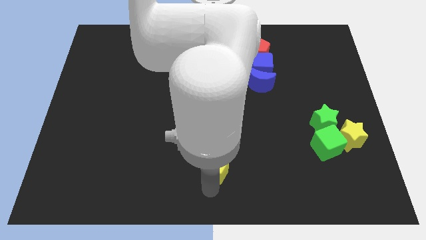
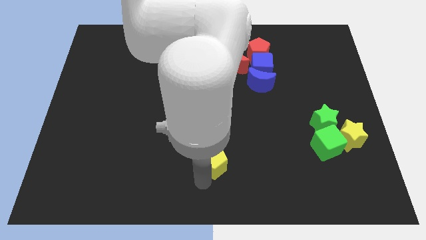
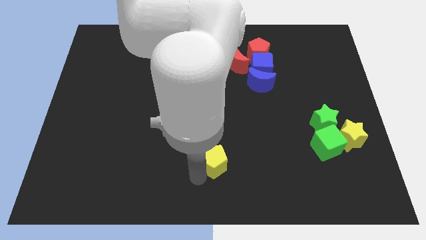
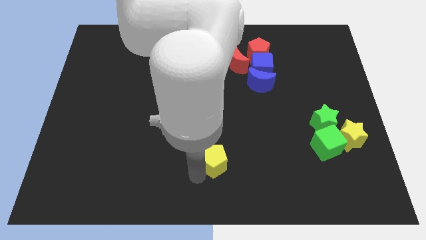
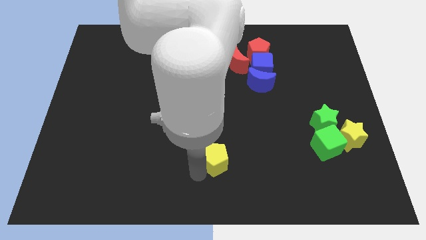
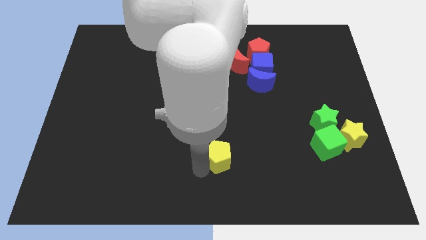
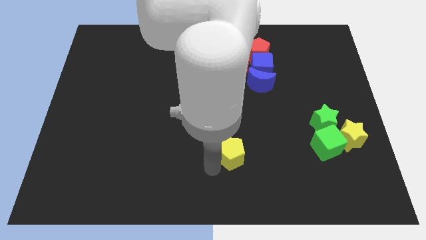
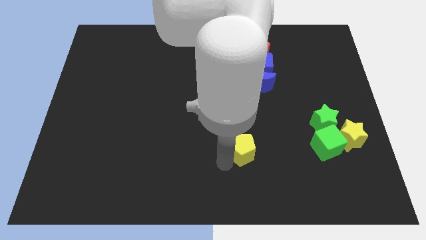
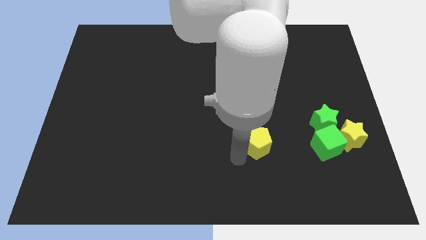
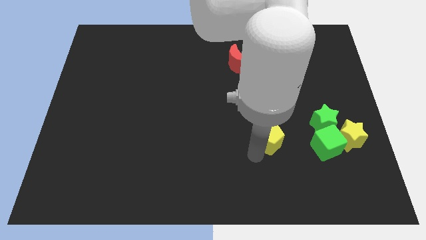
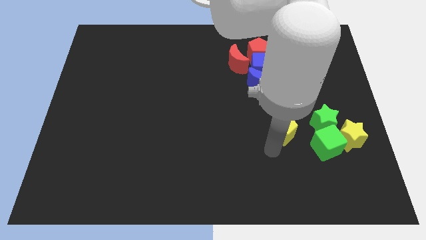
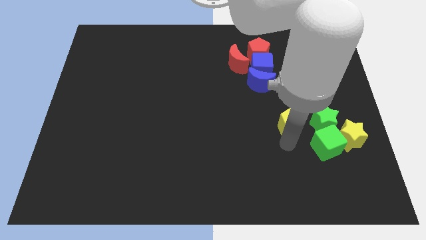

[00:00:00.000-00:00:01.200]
move the yellow pentagon towards the left side of the green star

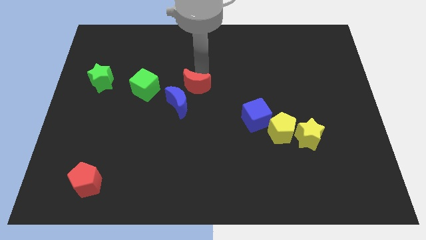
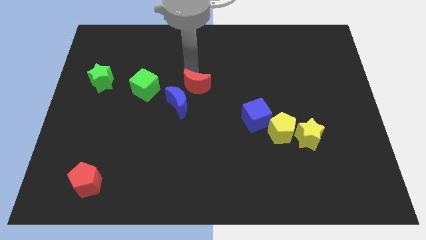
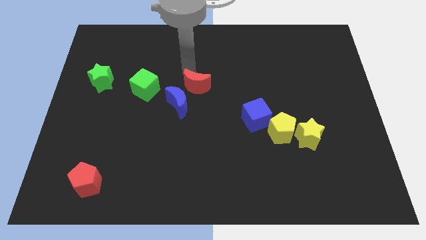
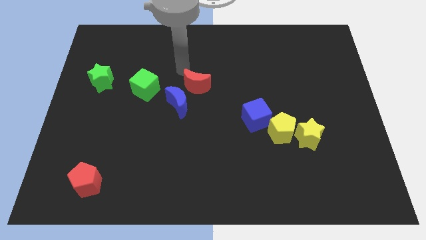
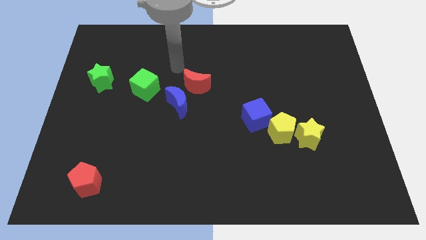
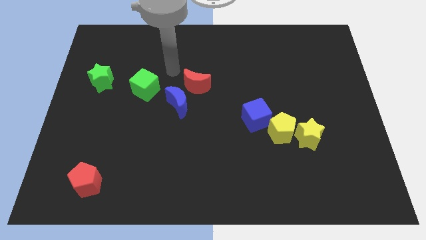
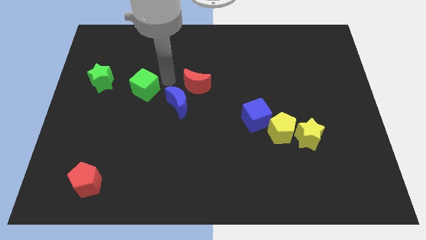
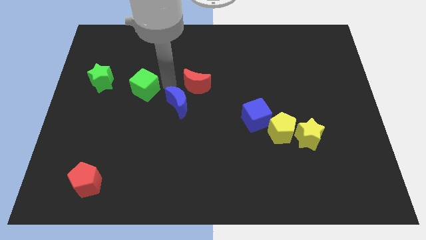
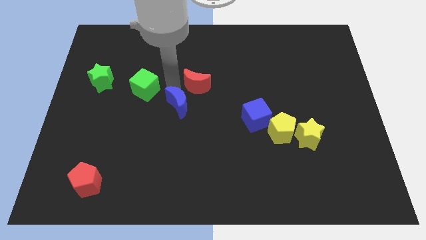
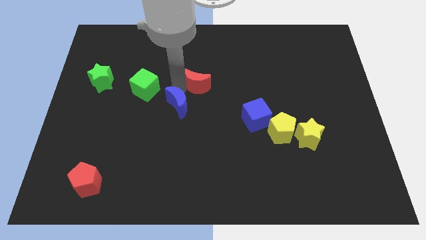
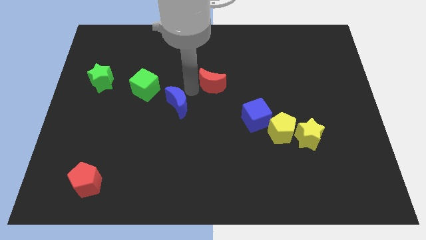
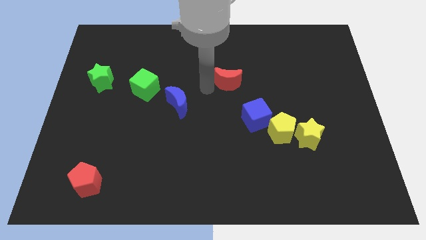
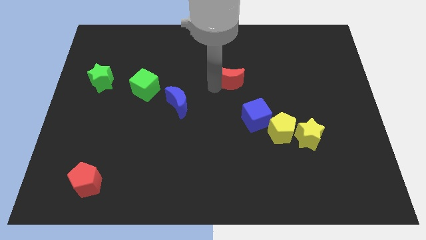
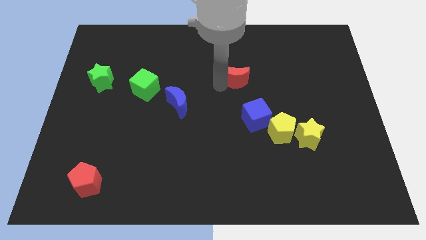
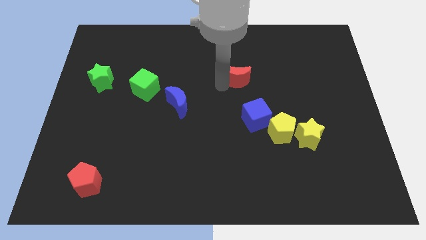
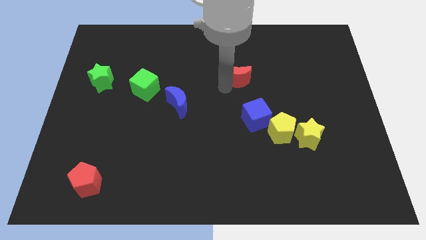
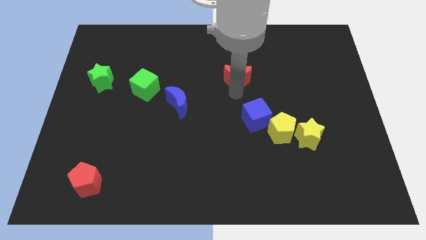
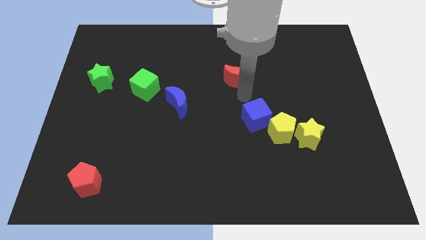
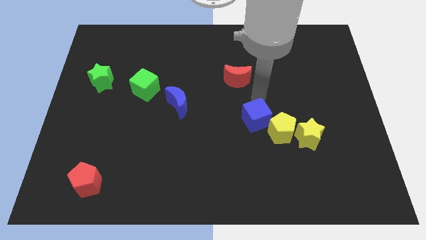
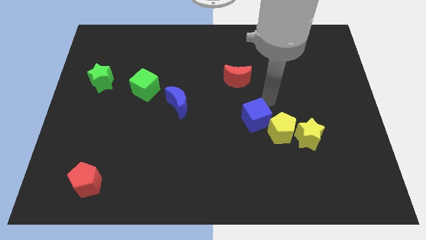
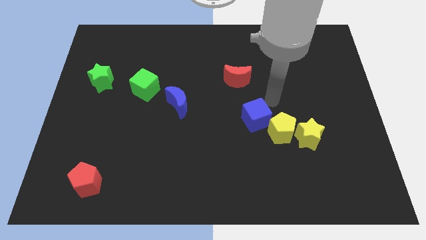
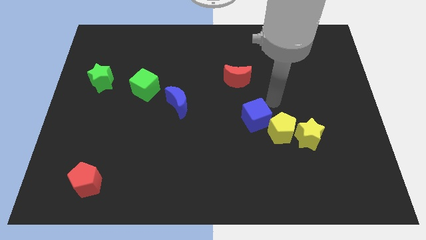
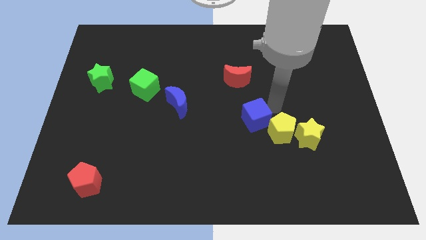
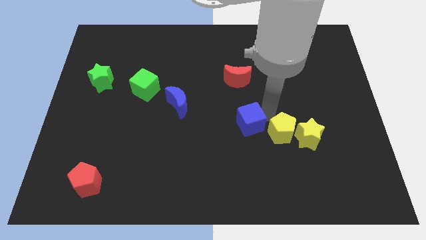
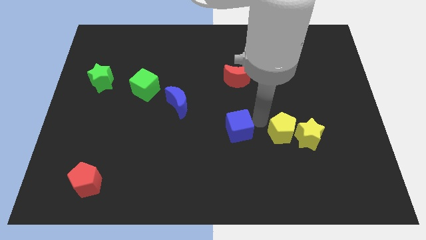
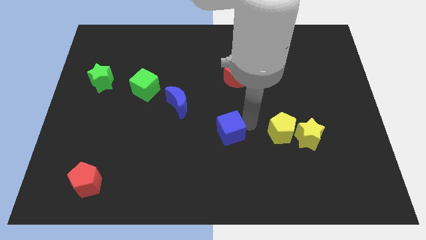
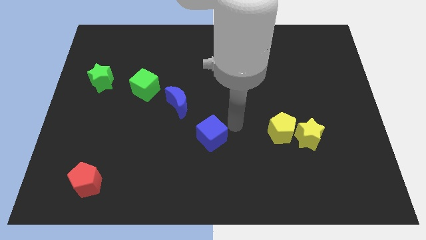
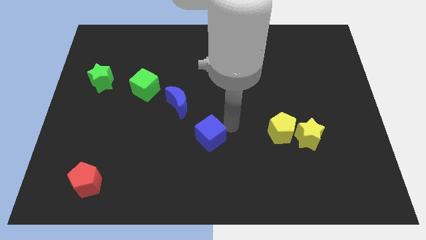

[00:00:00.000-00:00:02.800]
place blue cube diagonally towards blue crescent

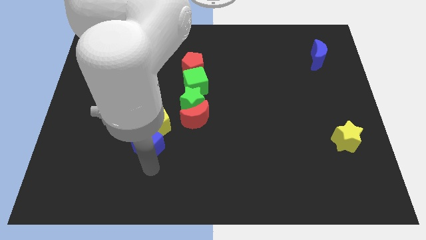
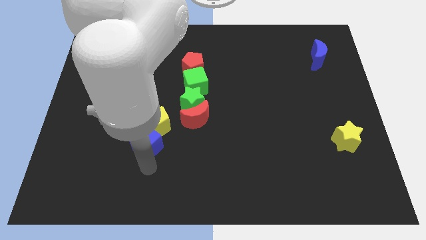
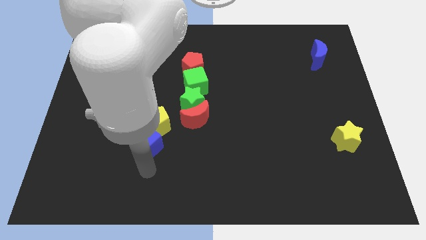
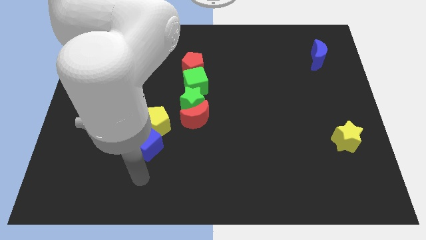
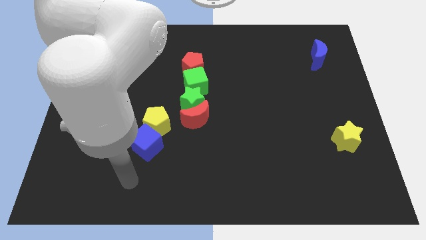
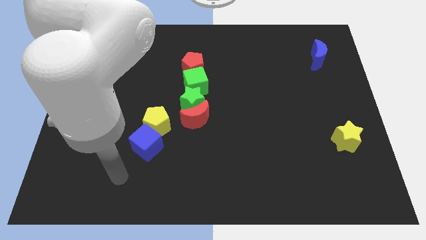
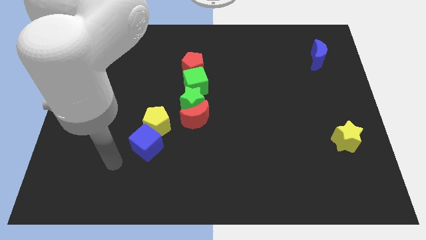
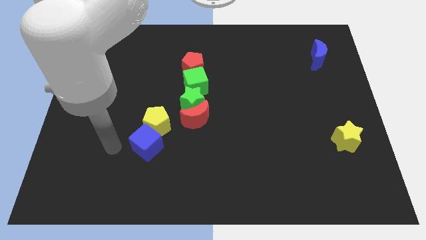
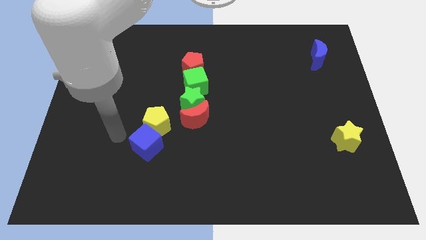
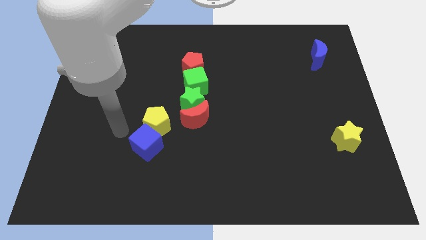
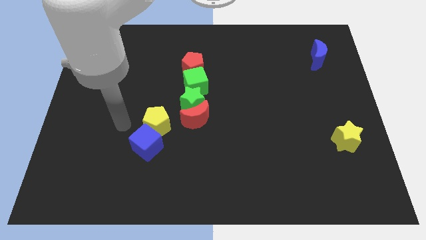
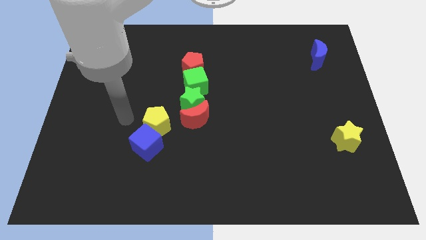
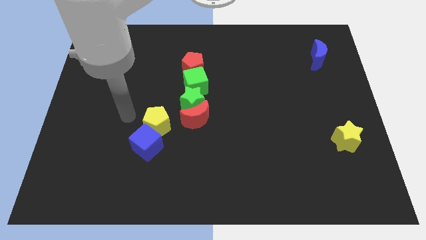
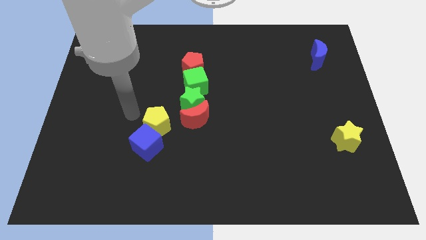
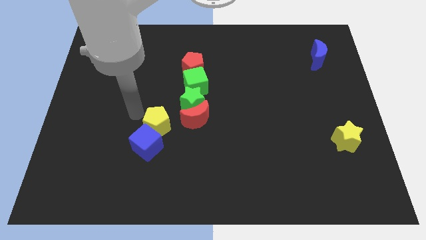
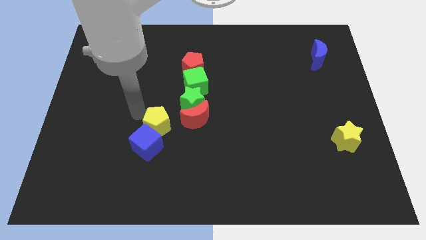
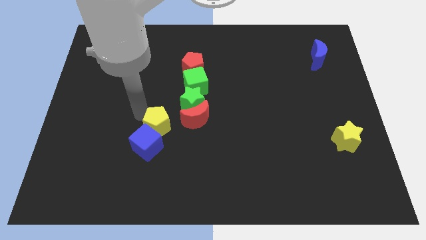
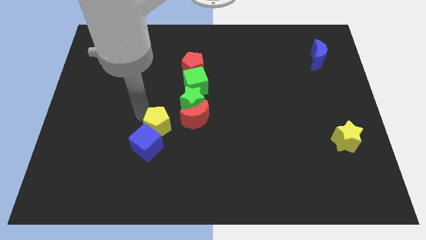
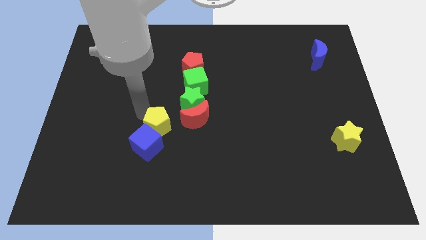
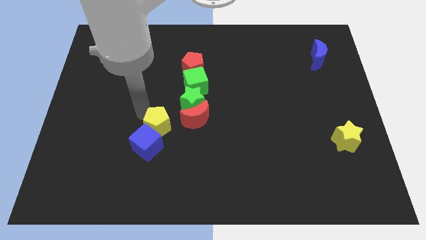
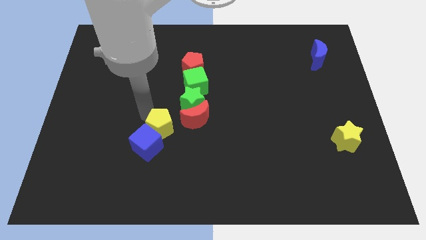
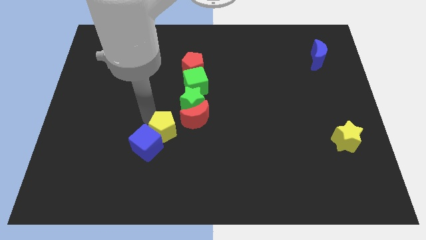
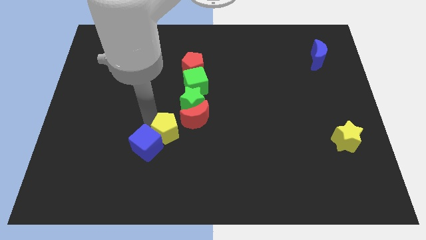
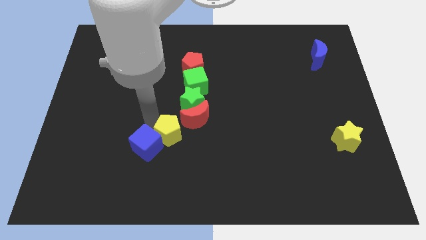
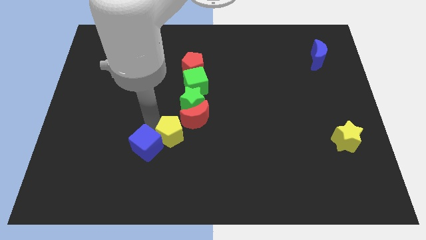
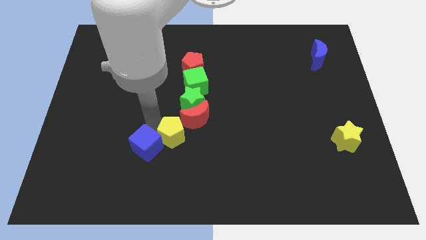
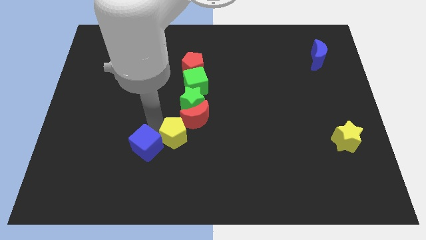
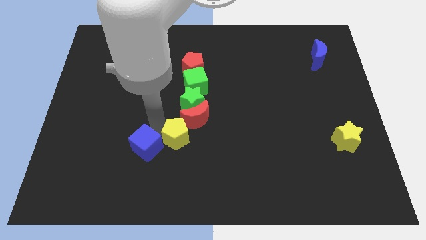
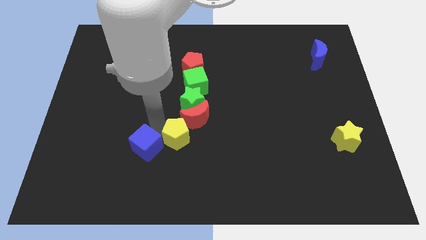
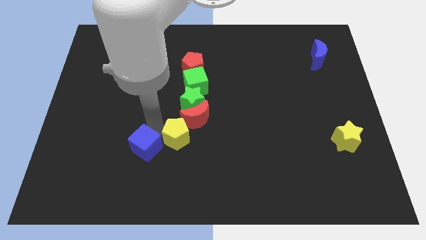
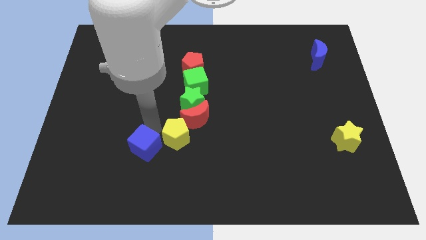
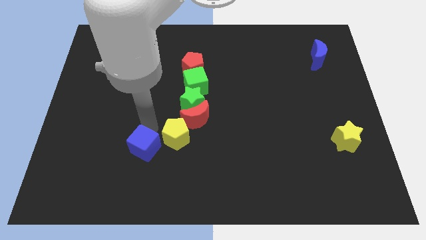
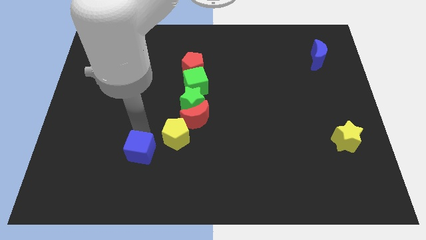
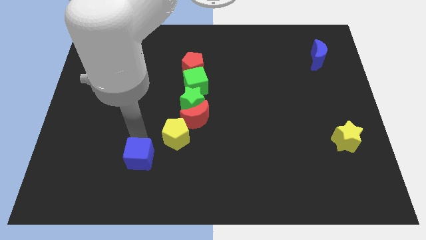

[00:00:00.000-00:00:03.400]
place the yellow pentagon in between red crescent and blue cube

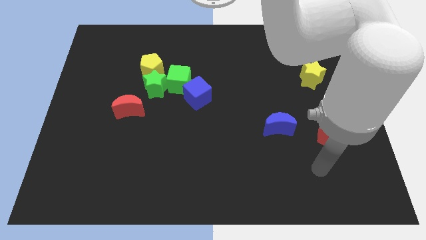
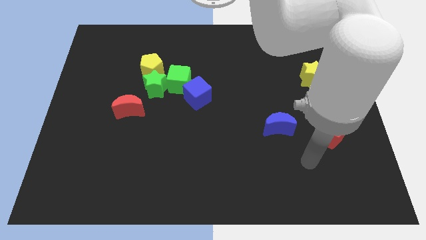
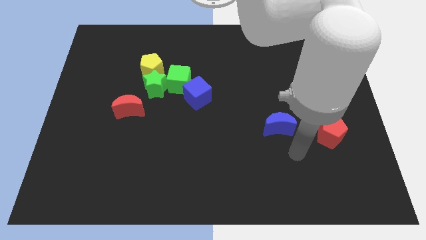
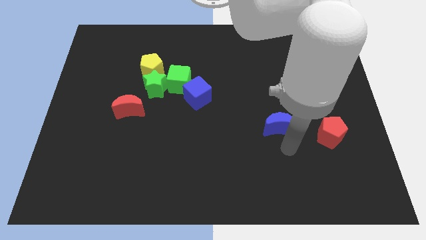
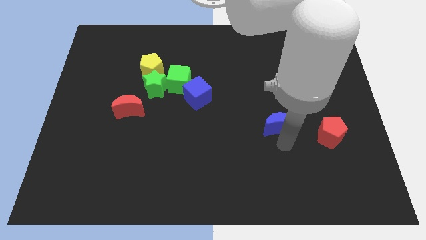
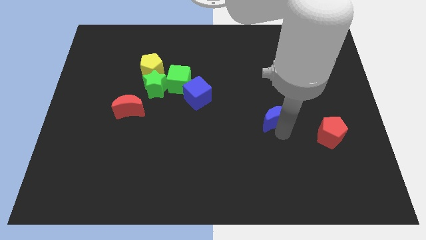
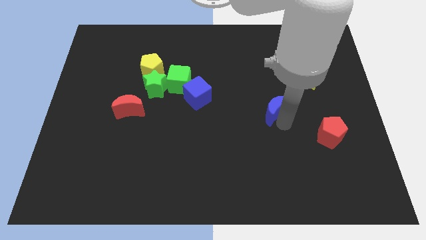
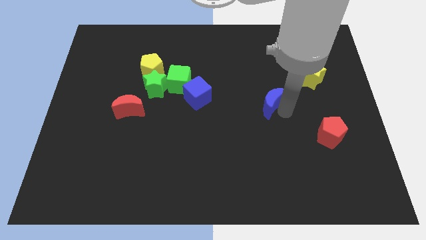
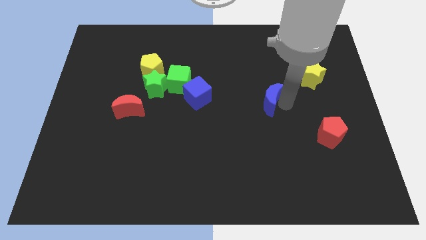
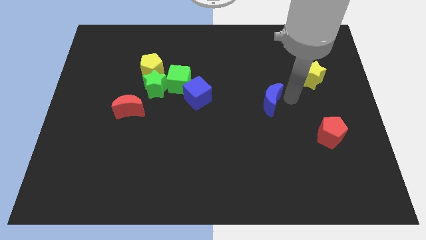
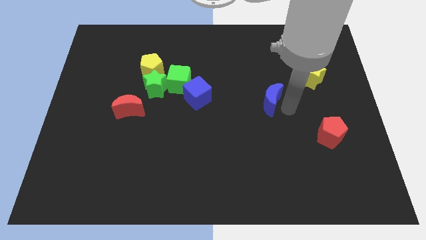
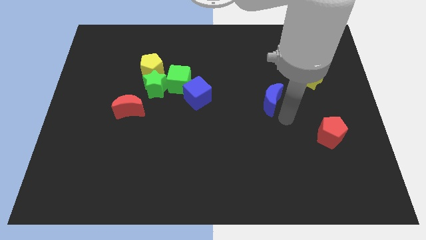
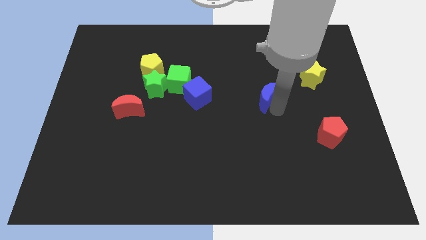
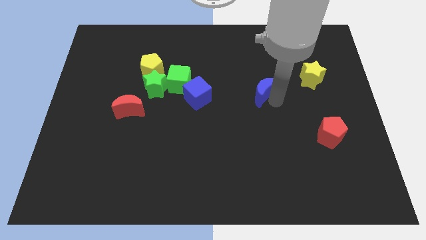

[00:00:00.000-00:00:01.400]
move the blue crescent parallel to the blue cube

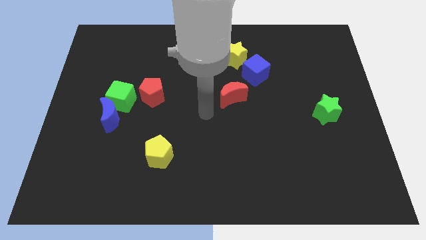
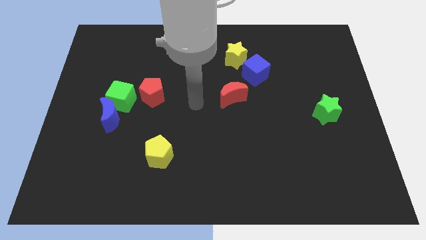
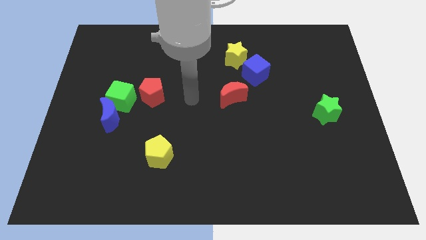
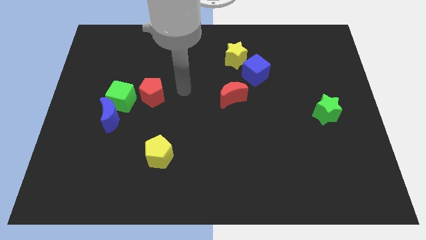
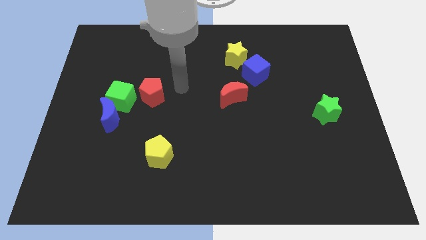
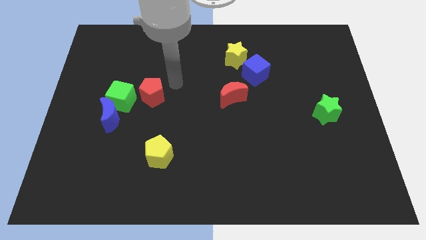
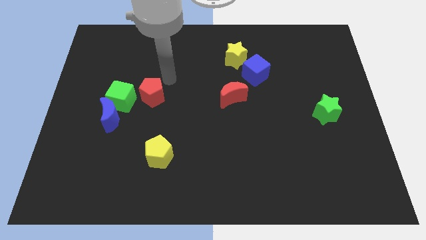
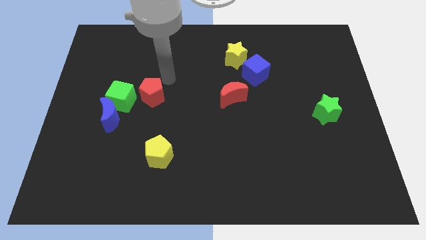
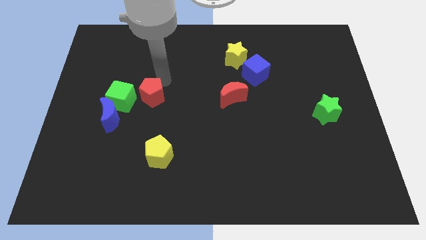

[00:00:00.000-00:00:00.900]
move arm right beside the red pentagon
